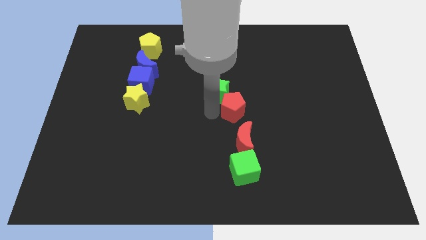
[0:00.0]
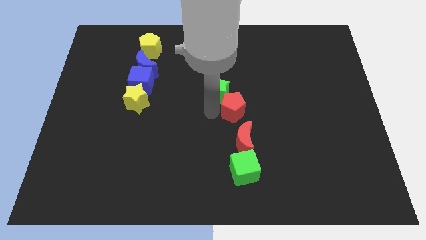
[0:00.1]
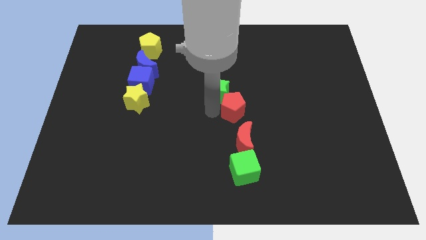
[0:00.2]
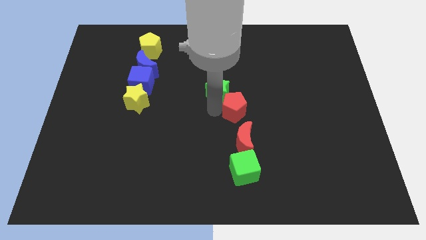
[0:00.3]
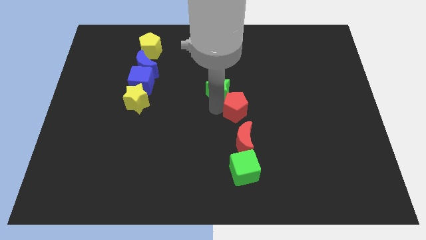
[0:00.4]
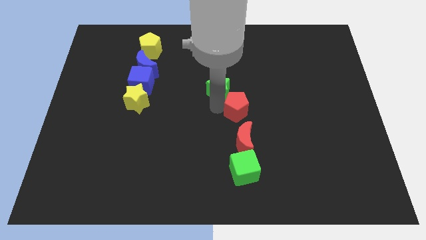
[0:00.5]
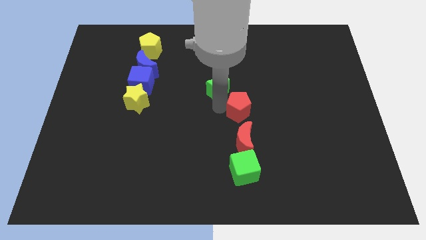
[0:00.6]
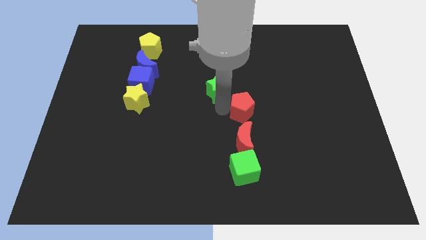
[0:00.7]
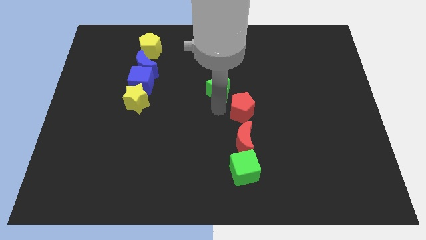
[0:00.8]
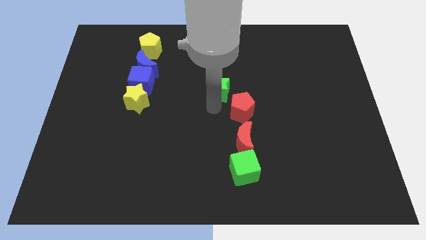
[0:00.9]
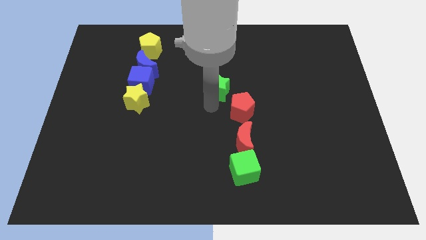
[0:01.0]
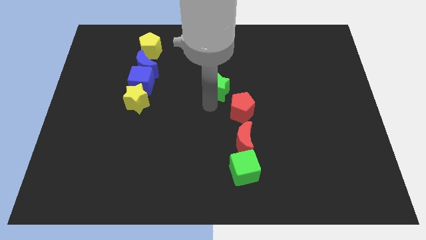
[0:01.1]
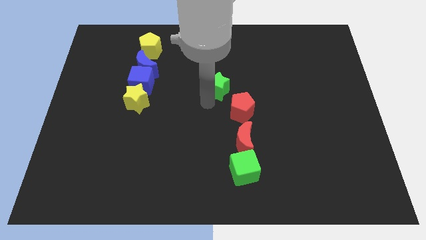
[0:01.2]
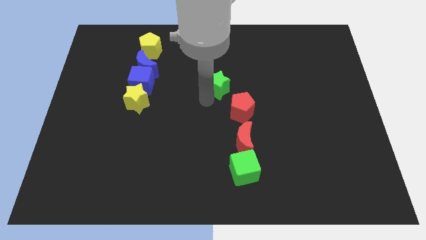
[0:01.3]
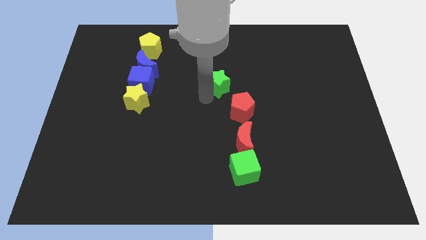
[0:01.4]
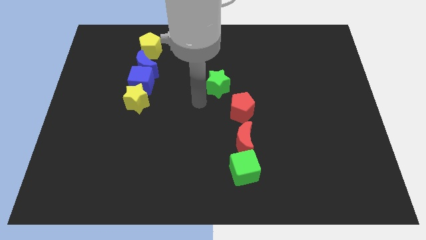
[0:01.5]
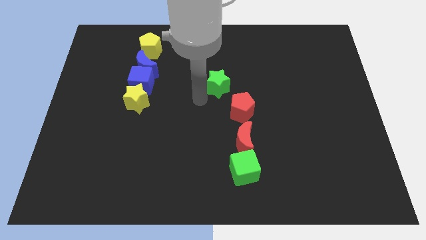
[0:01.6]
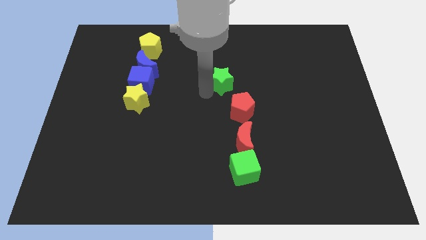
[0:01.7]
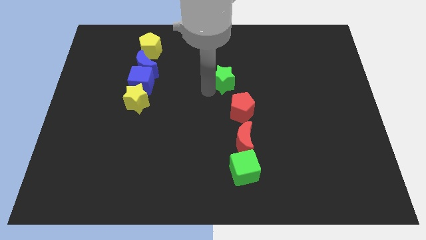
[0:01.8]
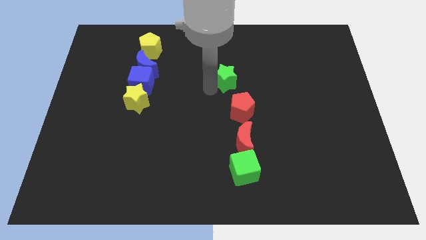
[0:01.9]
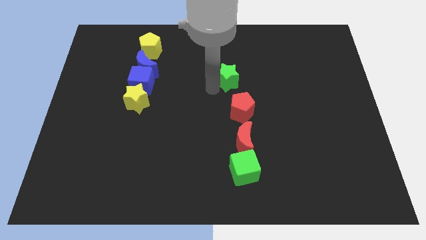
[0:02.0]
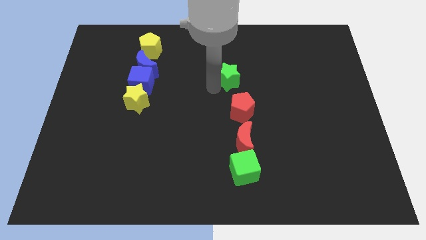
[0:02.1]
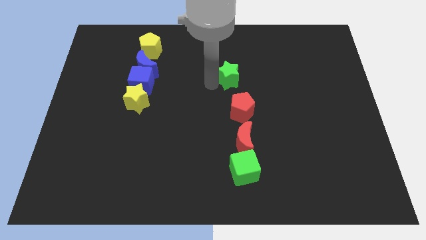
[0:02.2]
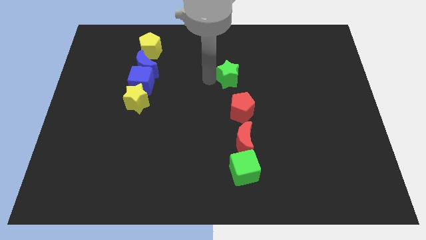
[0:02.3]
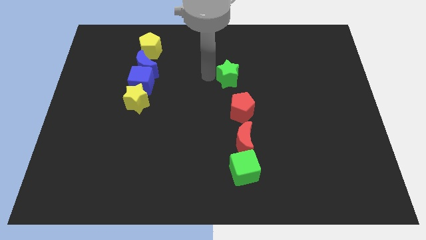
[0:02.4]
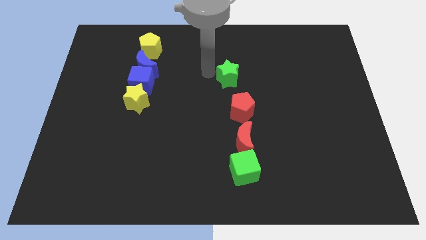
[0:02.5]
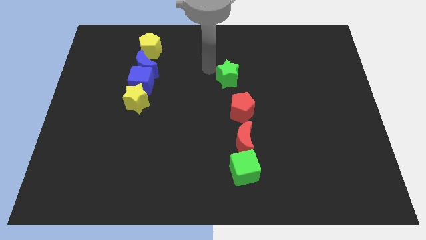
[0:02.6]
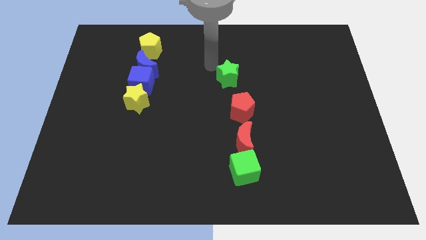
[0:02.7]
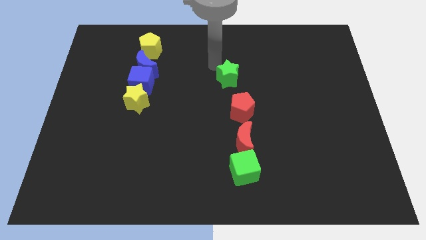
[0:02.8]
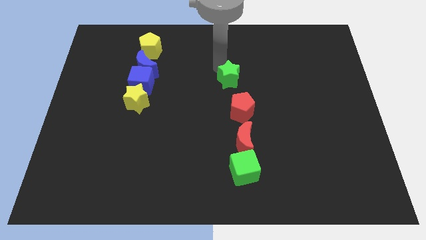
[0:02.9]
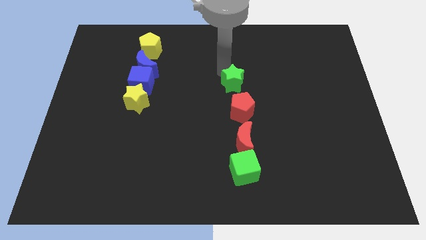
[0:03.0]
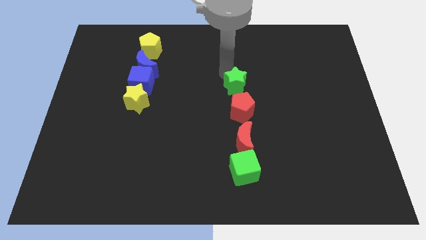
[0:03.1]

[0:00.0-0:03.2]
separate green star from red pentagon

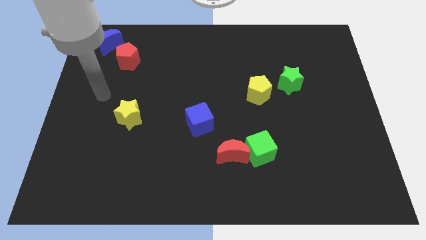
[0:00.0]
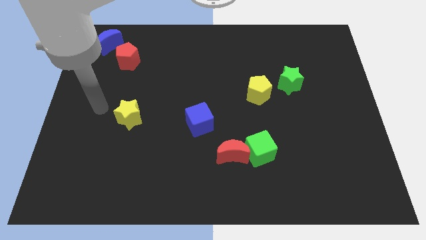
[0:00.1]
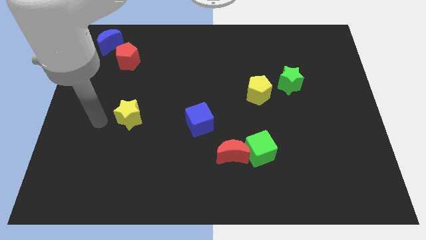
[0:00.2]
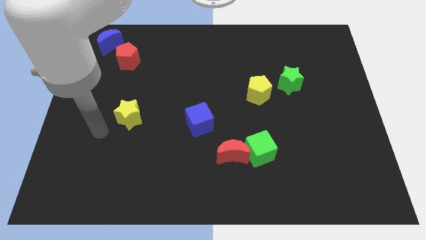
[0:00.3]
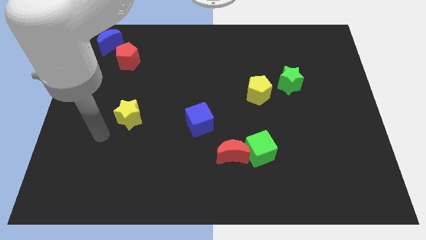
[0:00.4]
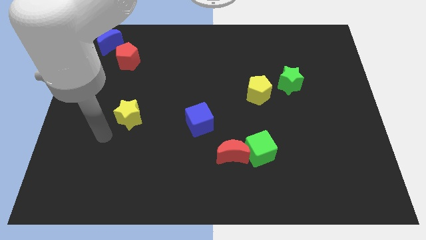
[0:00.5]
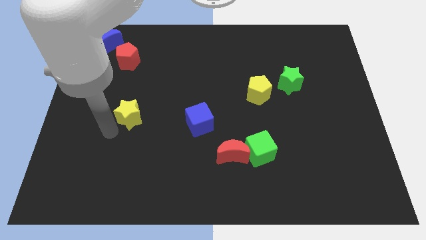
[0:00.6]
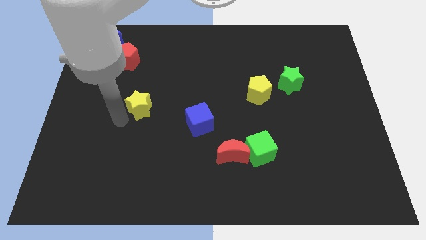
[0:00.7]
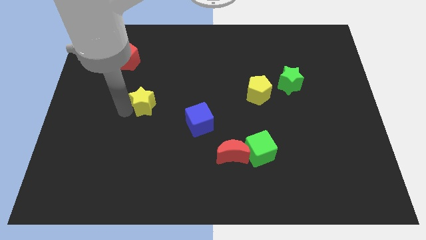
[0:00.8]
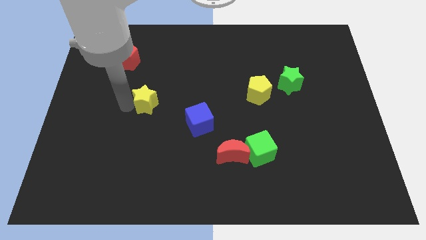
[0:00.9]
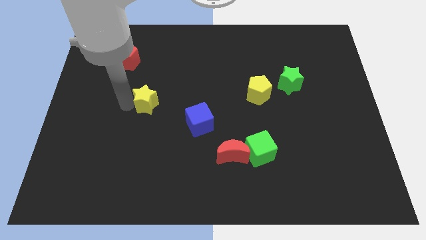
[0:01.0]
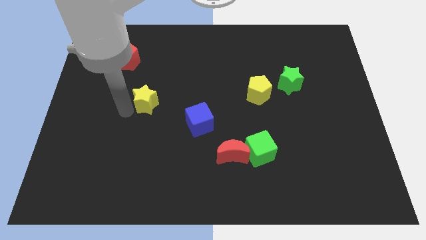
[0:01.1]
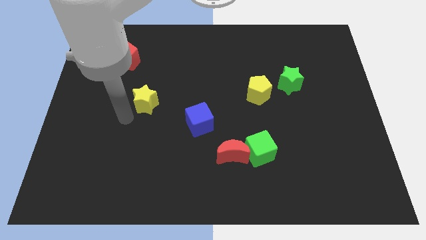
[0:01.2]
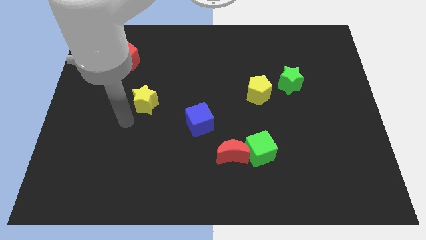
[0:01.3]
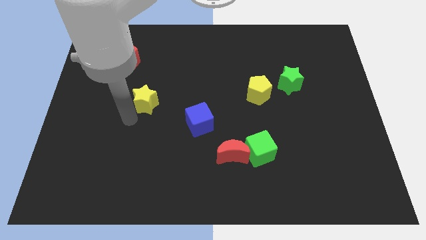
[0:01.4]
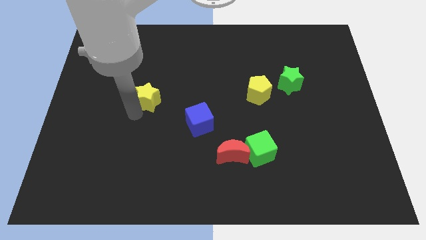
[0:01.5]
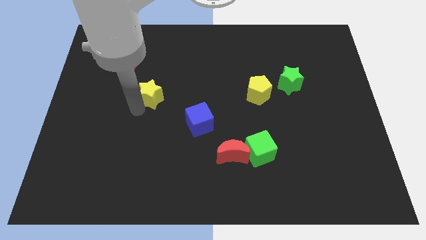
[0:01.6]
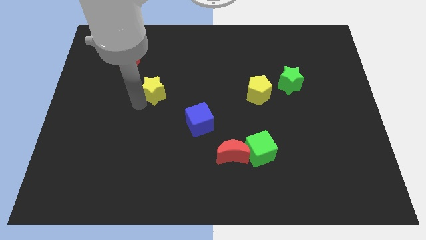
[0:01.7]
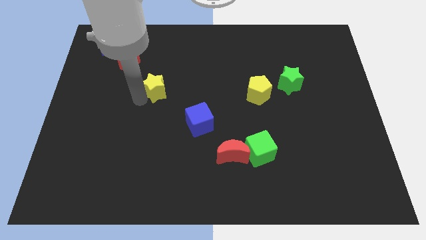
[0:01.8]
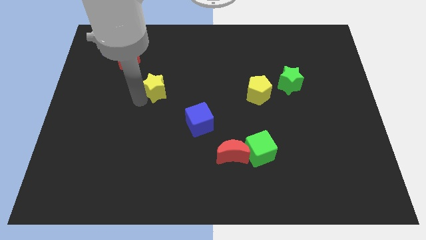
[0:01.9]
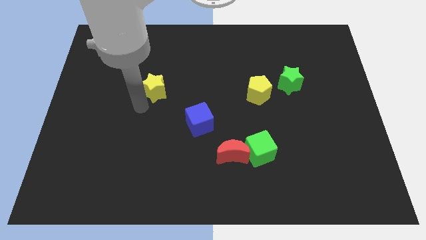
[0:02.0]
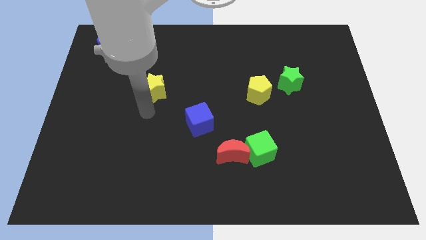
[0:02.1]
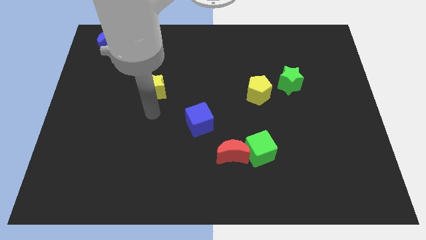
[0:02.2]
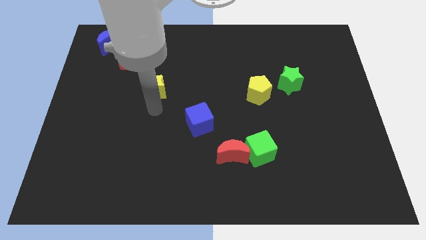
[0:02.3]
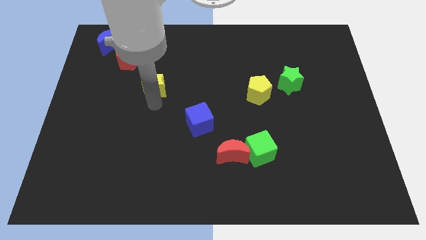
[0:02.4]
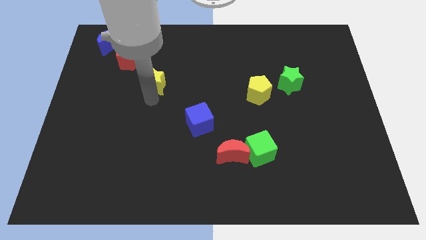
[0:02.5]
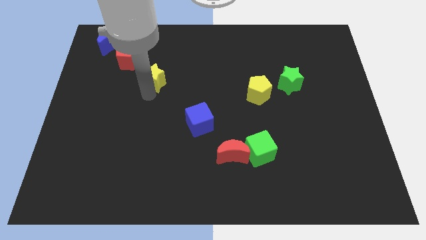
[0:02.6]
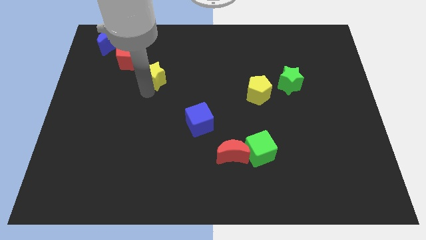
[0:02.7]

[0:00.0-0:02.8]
place yellow star between blue cube and red pentagon

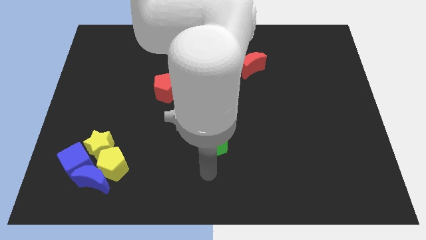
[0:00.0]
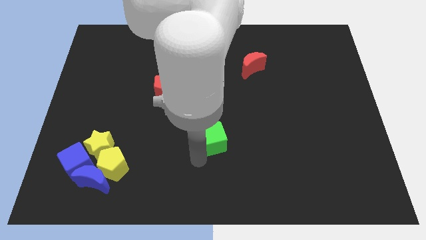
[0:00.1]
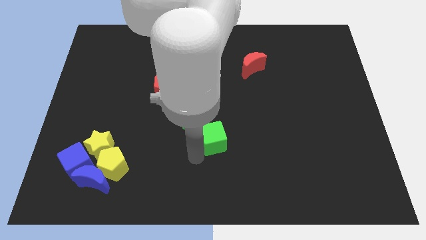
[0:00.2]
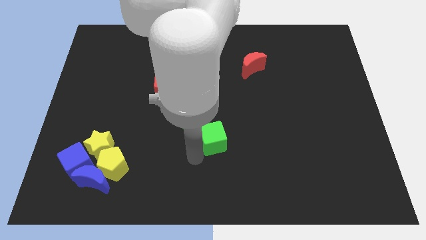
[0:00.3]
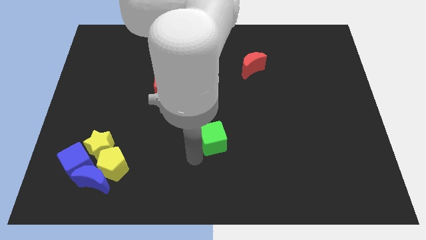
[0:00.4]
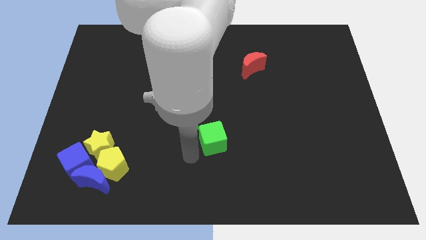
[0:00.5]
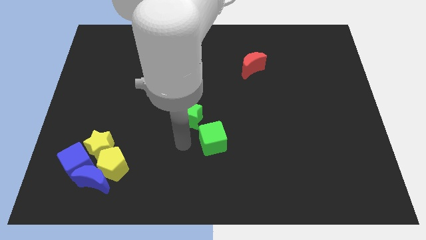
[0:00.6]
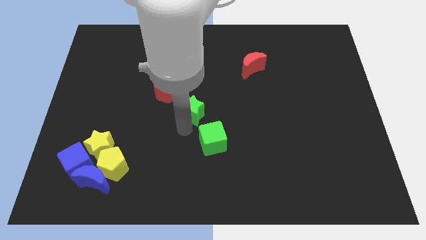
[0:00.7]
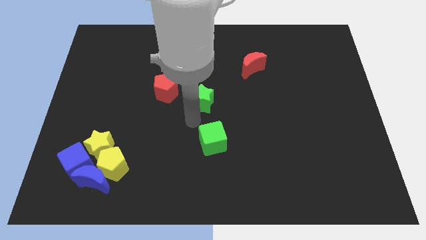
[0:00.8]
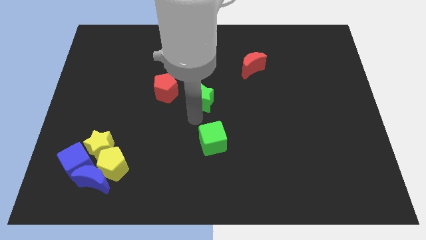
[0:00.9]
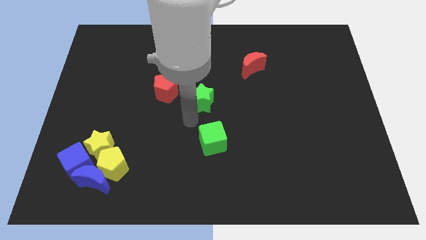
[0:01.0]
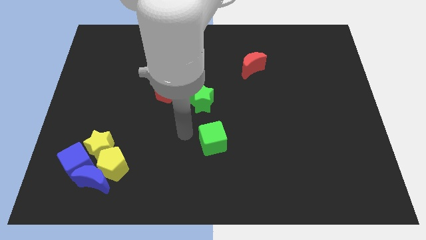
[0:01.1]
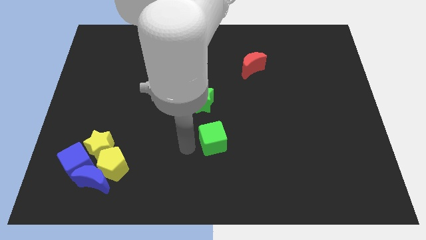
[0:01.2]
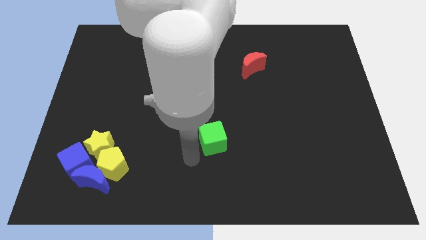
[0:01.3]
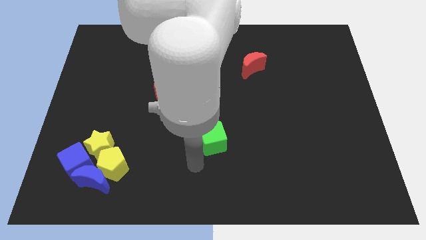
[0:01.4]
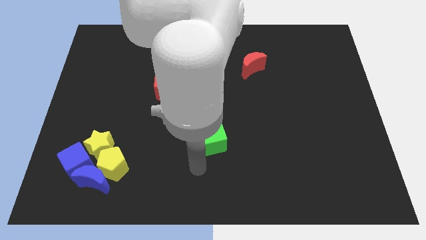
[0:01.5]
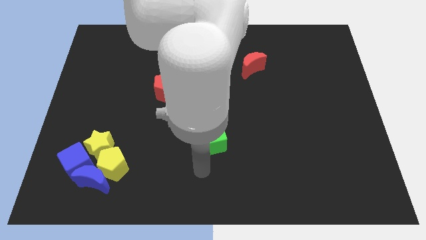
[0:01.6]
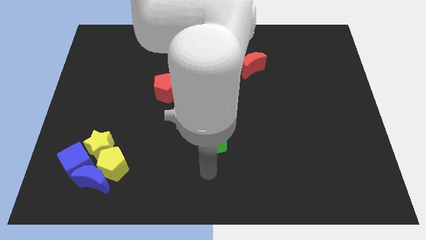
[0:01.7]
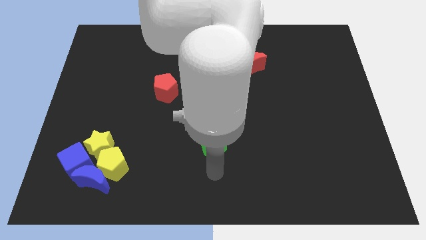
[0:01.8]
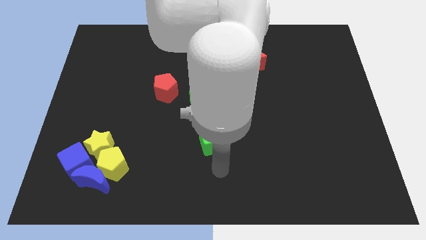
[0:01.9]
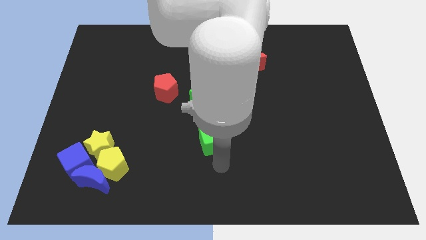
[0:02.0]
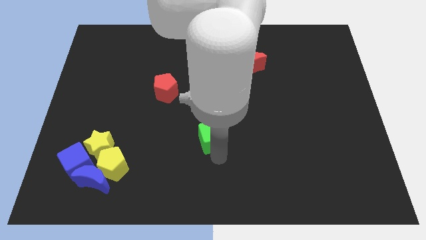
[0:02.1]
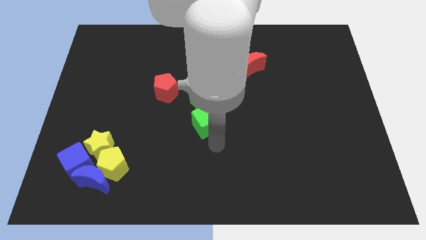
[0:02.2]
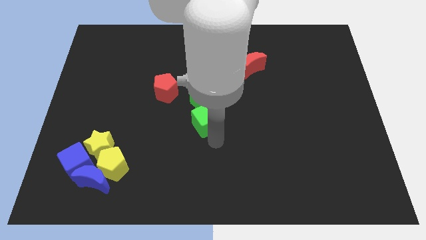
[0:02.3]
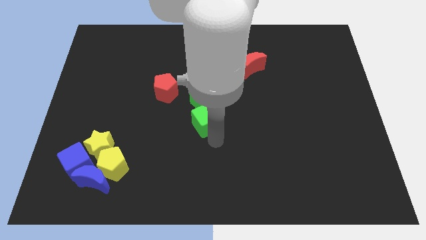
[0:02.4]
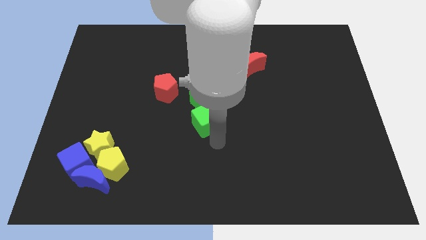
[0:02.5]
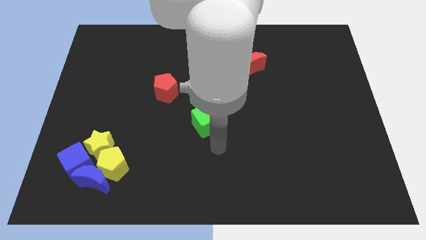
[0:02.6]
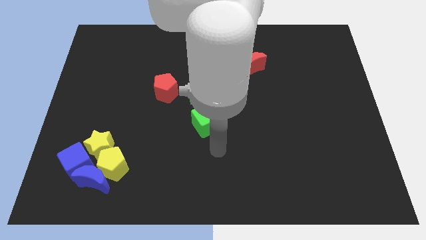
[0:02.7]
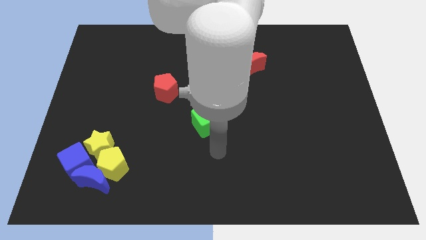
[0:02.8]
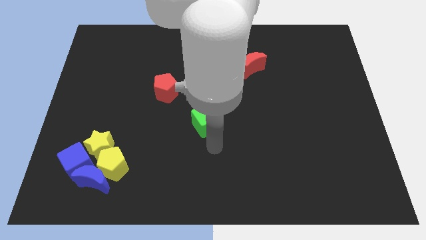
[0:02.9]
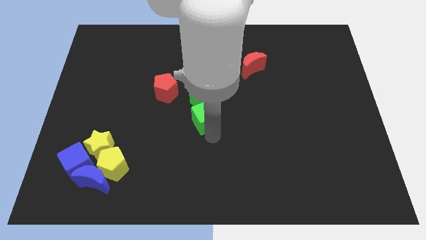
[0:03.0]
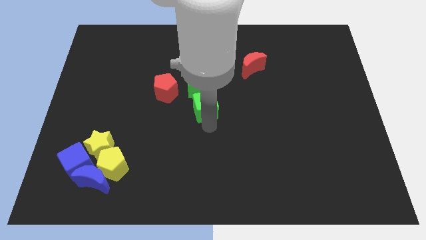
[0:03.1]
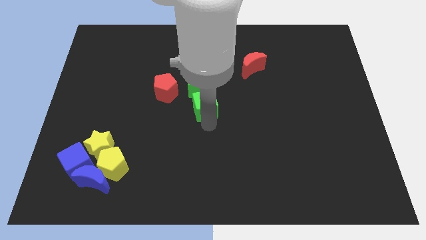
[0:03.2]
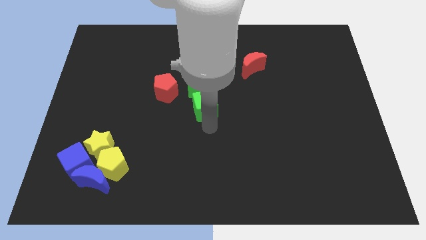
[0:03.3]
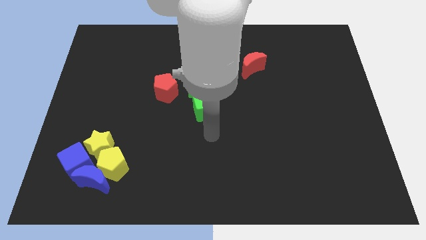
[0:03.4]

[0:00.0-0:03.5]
bring the green cube at the left side of the red pentagon
